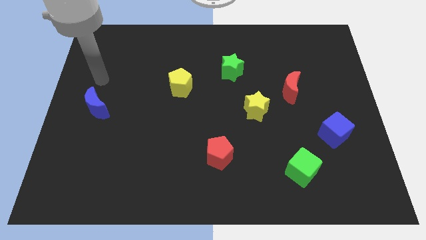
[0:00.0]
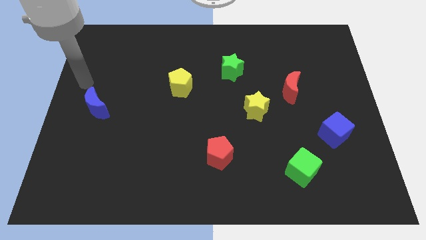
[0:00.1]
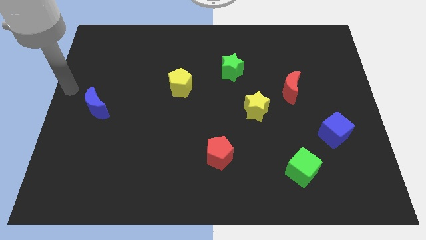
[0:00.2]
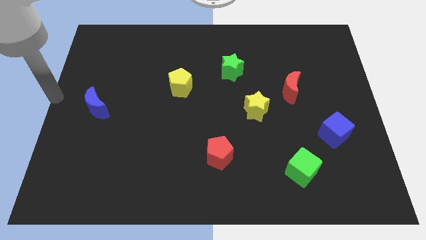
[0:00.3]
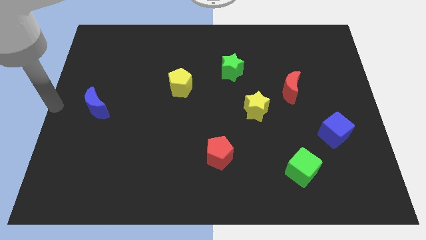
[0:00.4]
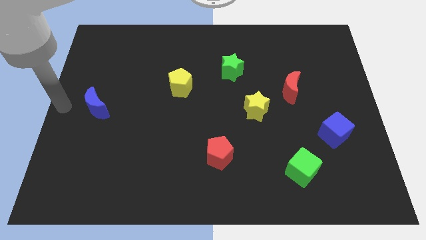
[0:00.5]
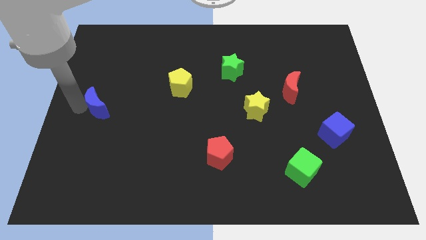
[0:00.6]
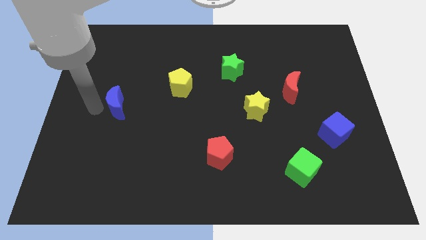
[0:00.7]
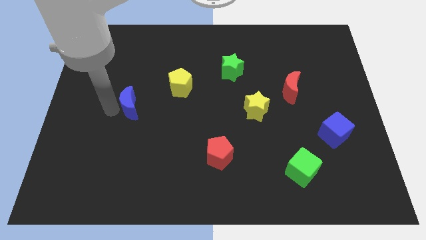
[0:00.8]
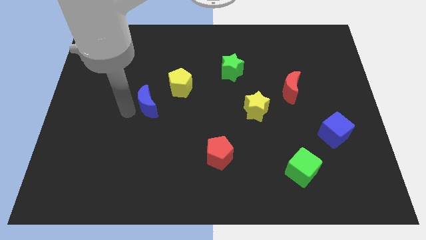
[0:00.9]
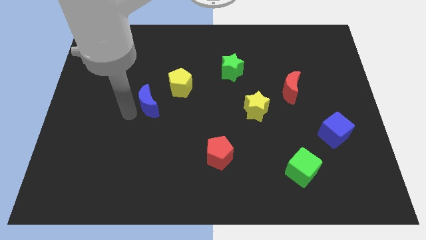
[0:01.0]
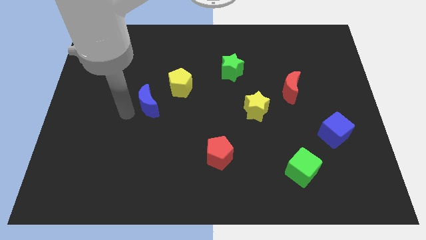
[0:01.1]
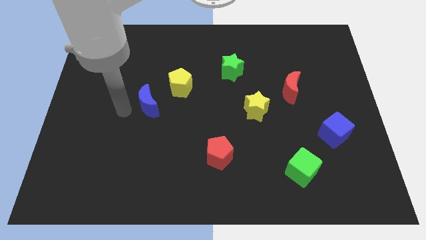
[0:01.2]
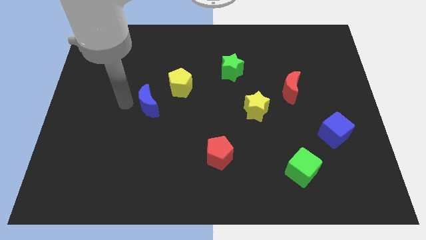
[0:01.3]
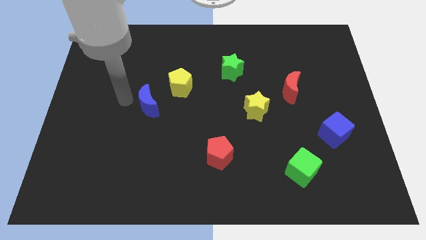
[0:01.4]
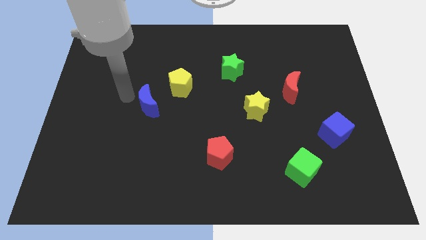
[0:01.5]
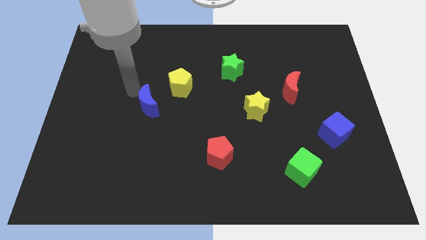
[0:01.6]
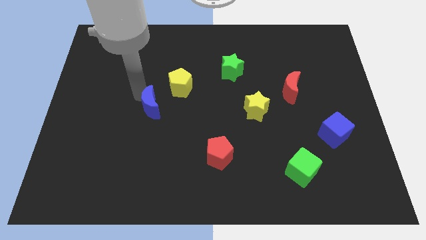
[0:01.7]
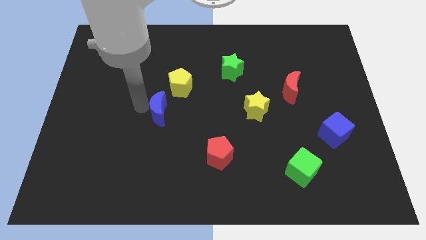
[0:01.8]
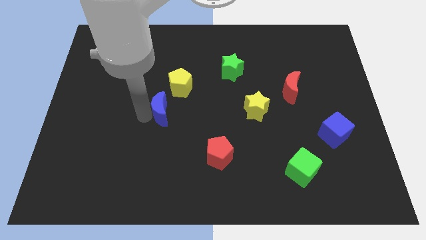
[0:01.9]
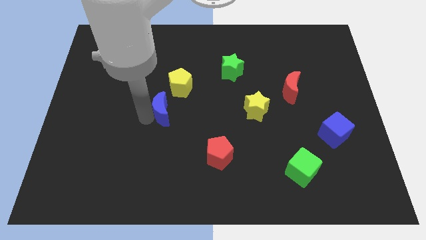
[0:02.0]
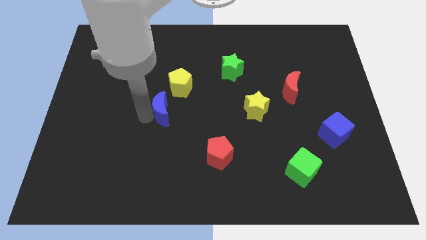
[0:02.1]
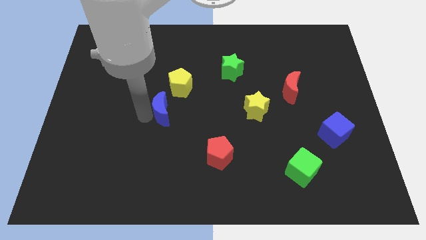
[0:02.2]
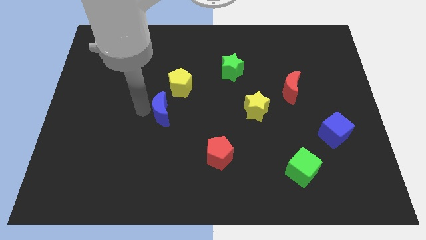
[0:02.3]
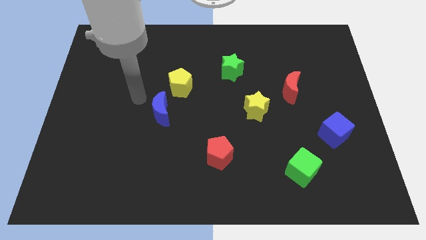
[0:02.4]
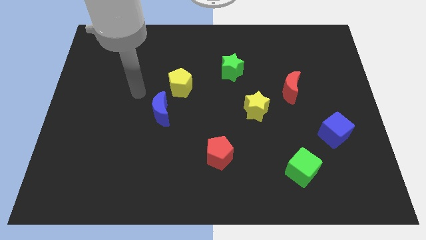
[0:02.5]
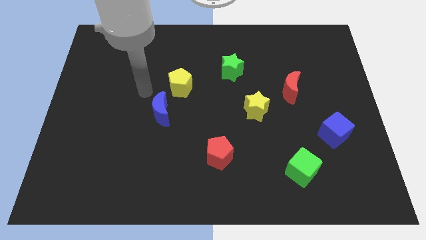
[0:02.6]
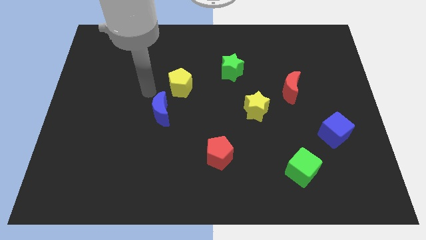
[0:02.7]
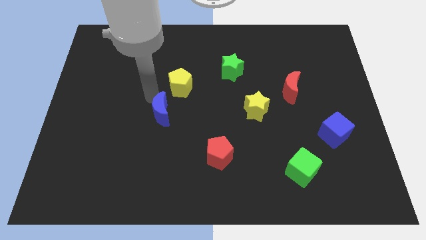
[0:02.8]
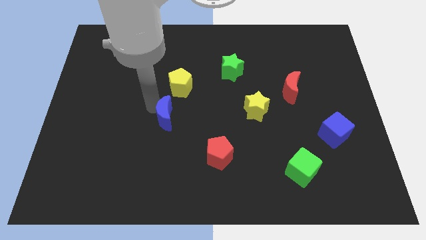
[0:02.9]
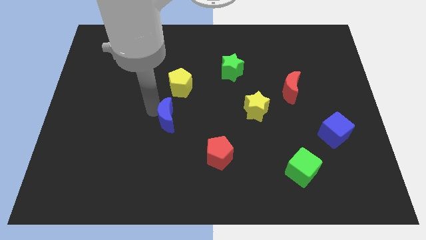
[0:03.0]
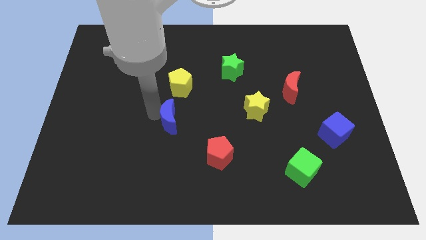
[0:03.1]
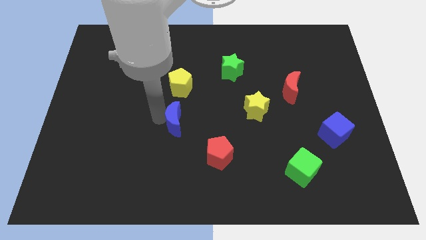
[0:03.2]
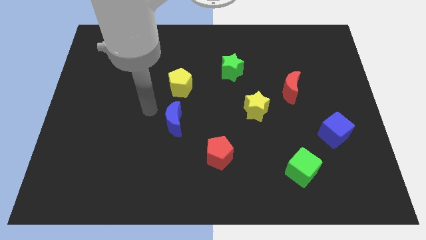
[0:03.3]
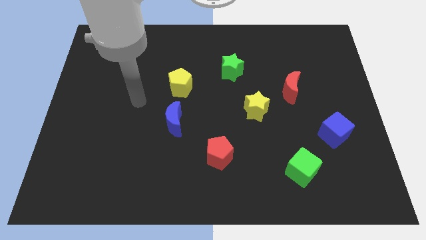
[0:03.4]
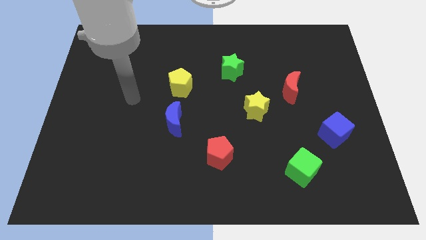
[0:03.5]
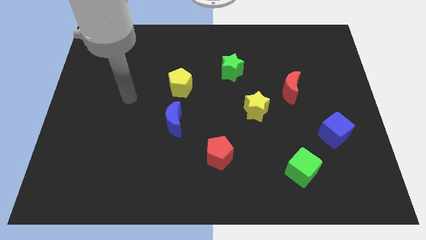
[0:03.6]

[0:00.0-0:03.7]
move the blue crescent below the yellow pentagon

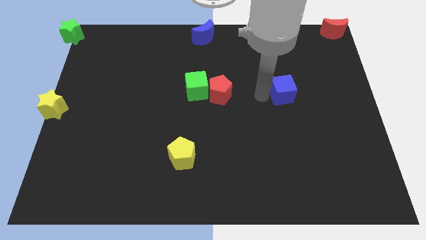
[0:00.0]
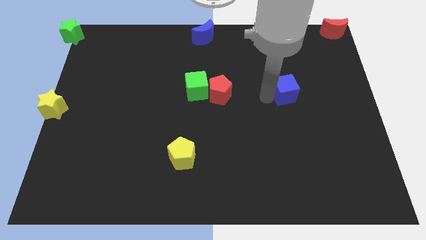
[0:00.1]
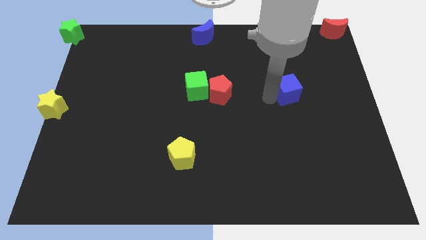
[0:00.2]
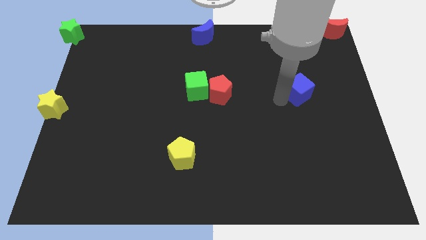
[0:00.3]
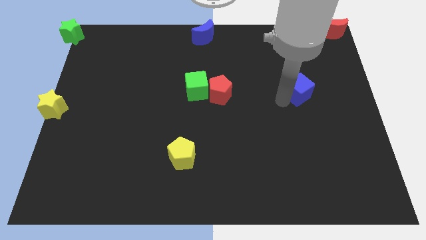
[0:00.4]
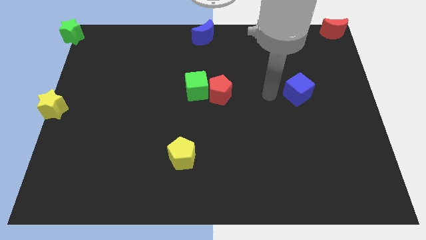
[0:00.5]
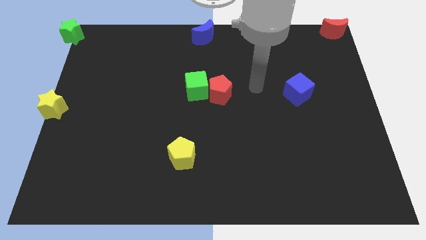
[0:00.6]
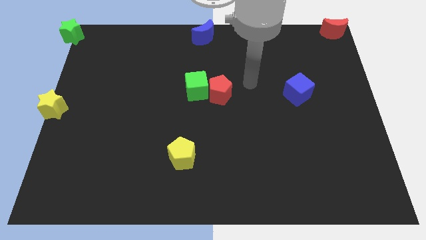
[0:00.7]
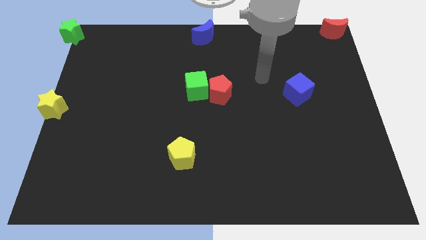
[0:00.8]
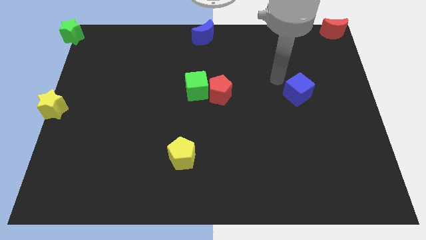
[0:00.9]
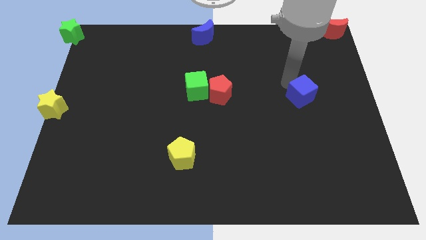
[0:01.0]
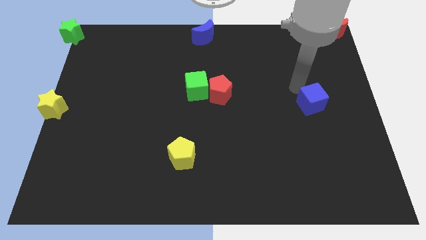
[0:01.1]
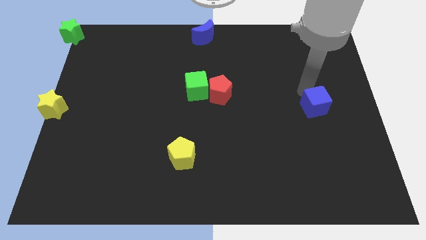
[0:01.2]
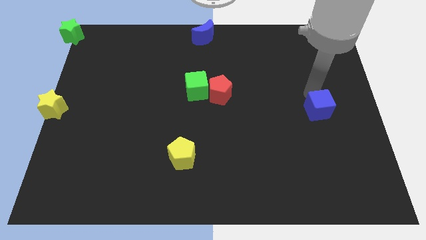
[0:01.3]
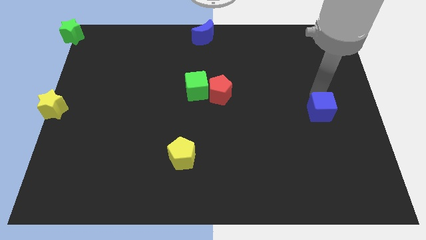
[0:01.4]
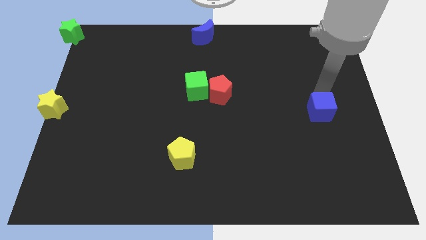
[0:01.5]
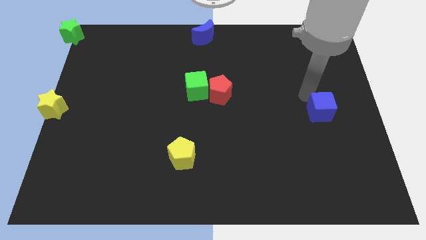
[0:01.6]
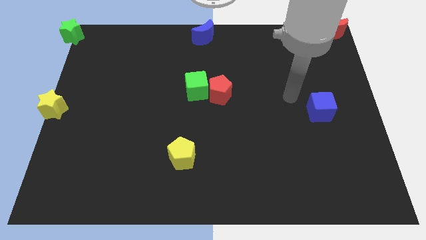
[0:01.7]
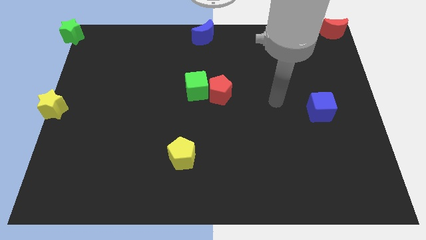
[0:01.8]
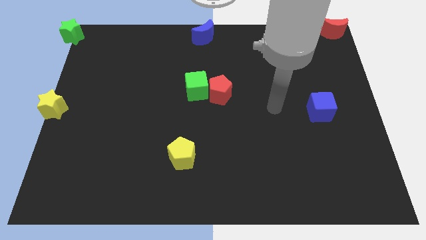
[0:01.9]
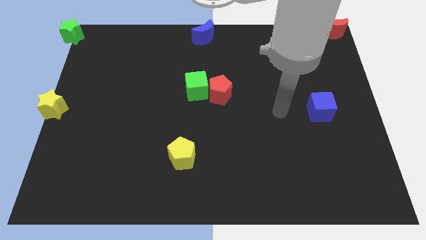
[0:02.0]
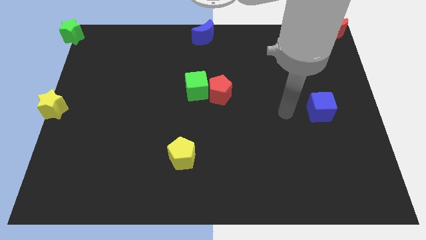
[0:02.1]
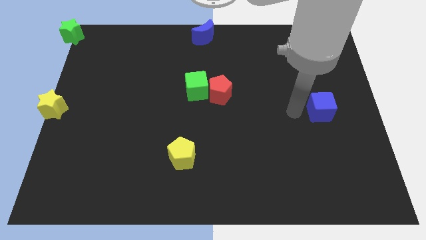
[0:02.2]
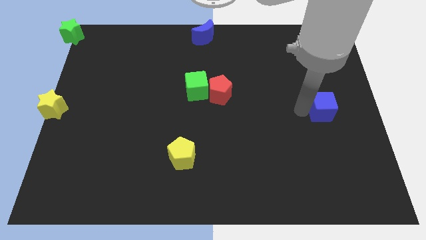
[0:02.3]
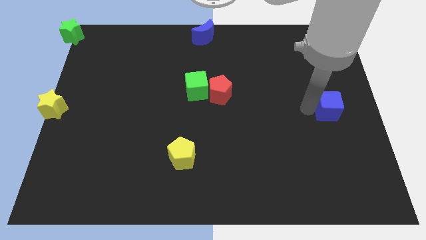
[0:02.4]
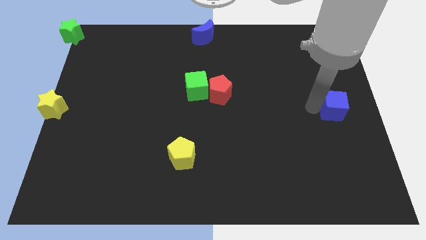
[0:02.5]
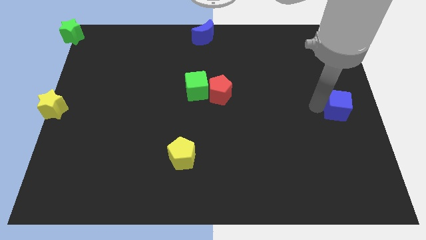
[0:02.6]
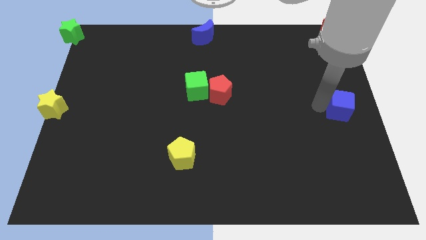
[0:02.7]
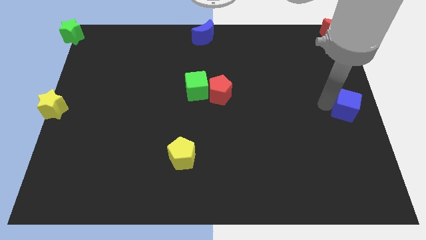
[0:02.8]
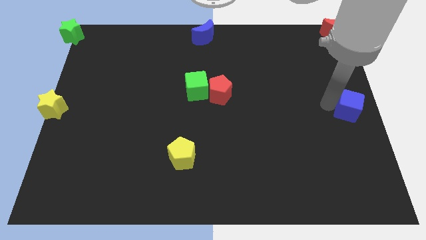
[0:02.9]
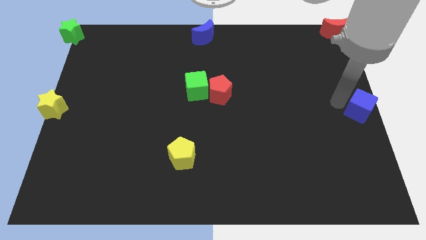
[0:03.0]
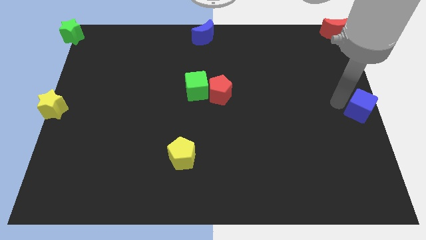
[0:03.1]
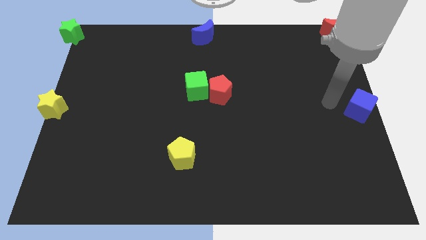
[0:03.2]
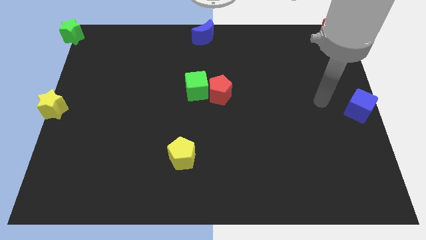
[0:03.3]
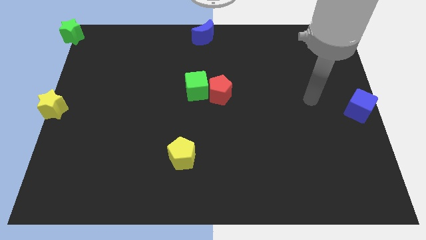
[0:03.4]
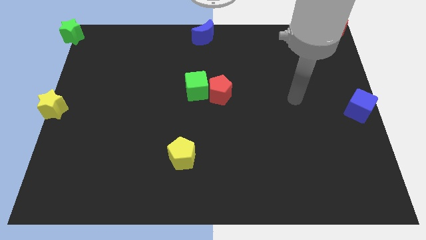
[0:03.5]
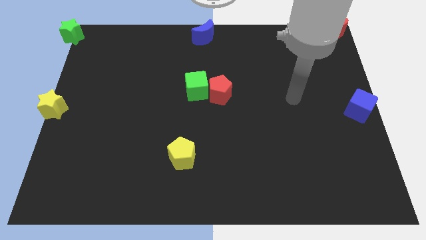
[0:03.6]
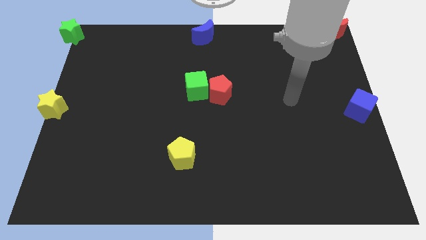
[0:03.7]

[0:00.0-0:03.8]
place the blue cube to the center right

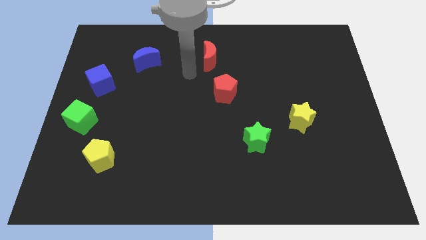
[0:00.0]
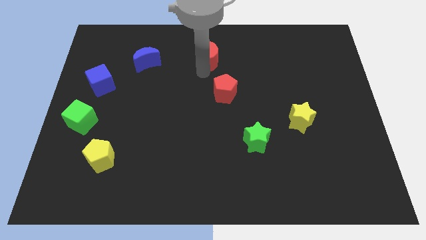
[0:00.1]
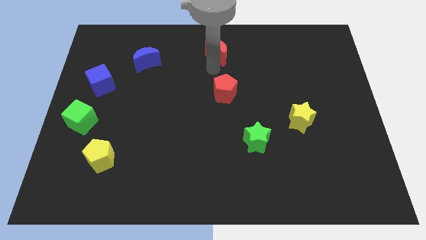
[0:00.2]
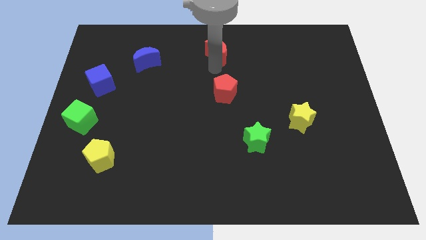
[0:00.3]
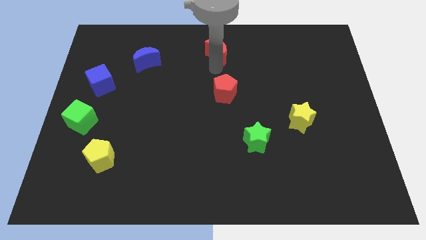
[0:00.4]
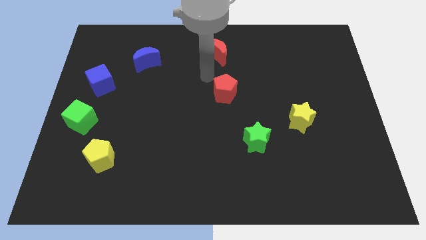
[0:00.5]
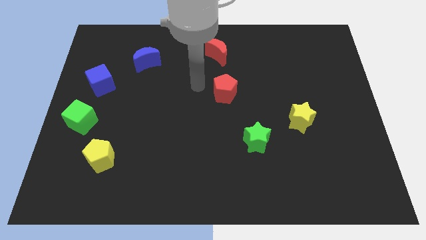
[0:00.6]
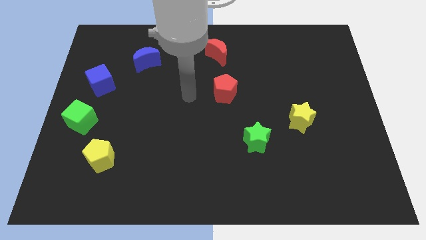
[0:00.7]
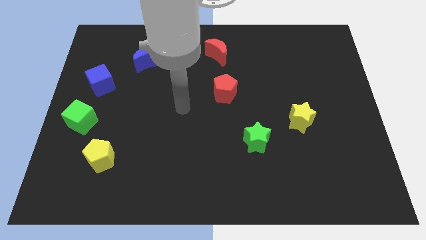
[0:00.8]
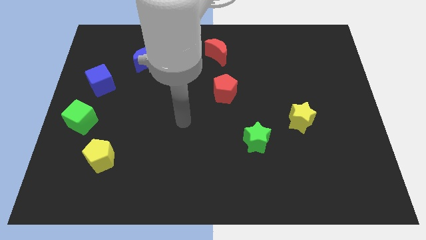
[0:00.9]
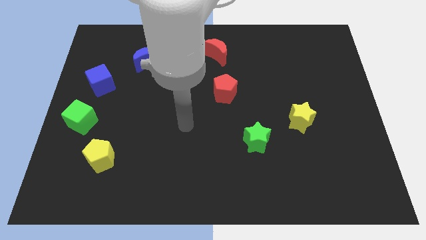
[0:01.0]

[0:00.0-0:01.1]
push the red crescent to the top center

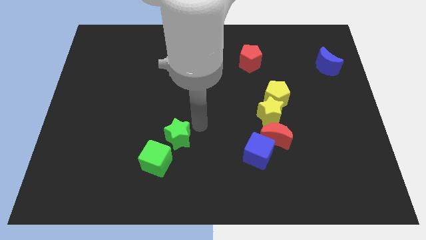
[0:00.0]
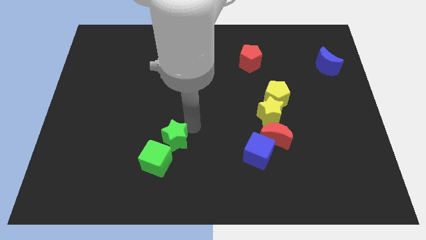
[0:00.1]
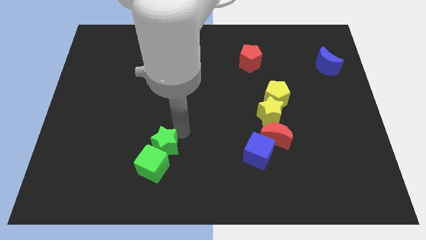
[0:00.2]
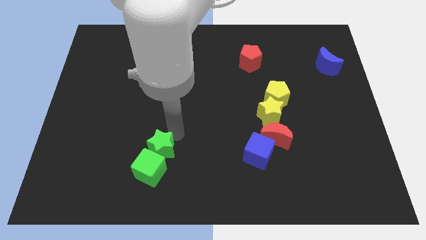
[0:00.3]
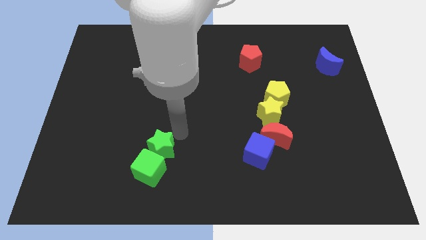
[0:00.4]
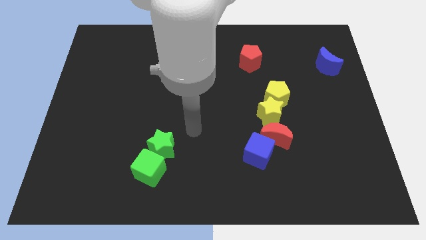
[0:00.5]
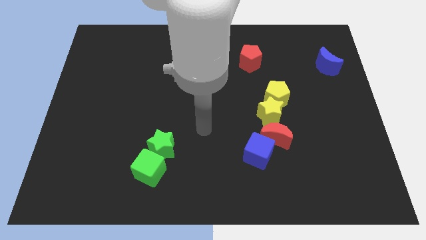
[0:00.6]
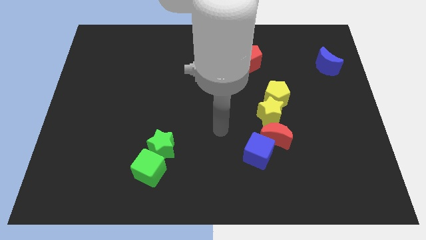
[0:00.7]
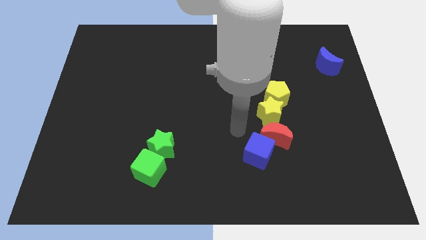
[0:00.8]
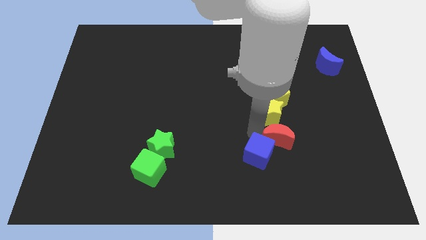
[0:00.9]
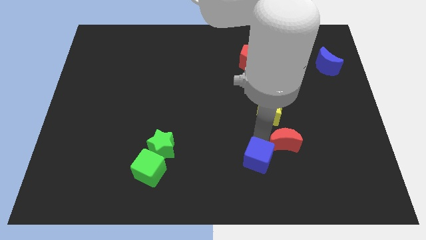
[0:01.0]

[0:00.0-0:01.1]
push the green star into the green cube
